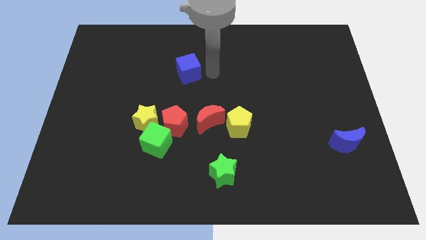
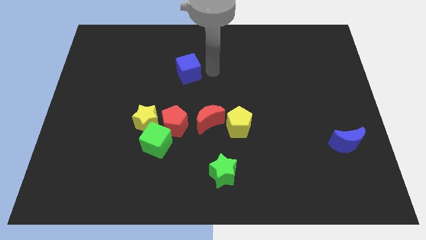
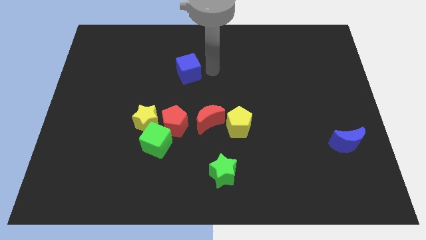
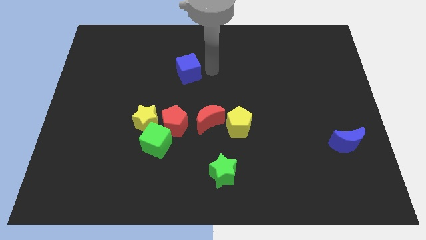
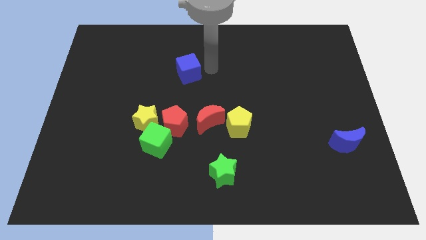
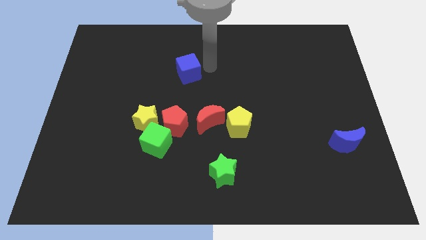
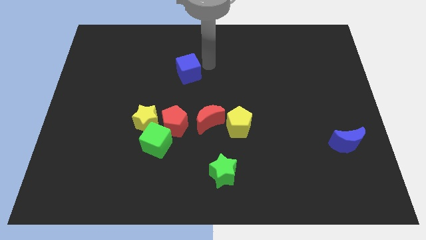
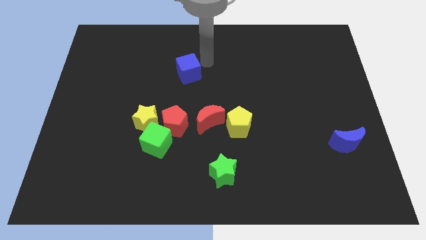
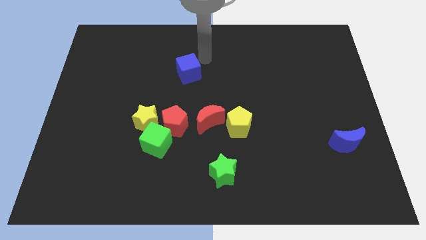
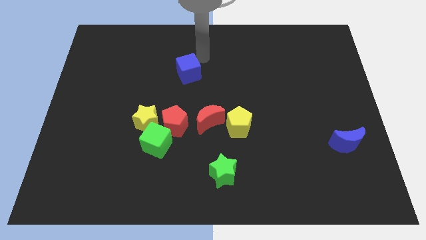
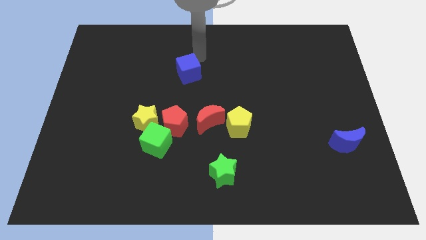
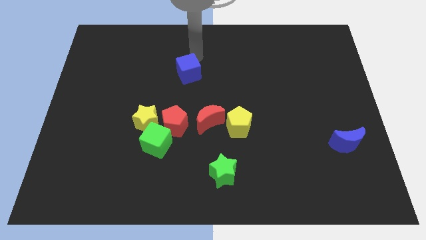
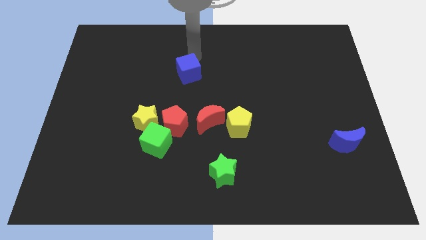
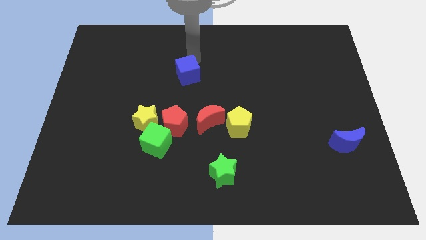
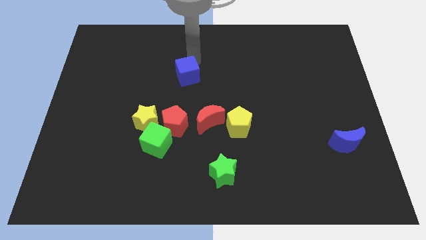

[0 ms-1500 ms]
touch the top of blue cube

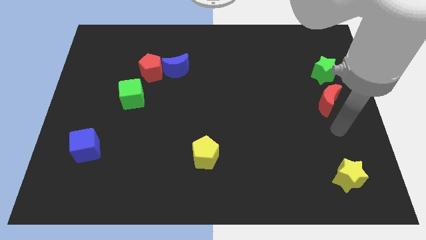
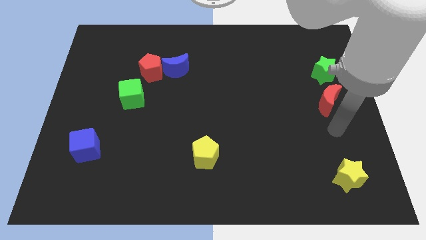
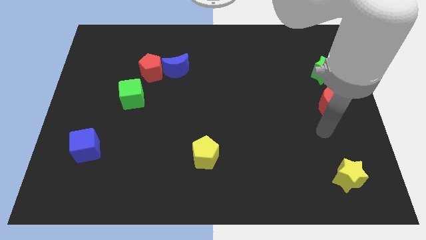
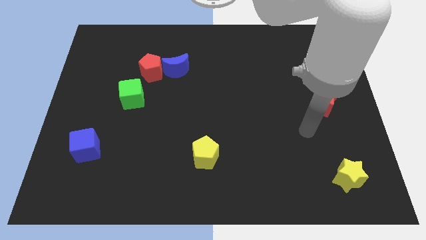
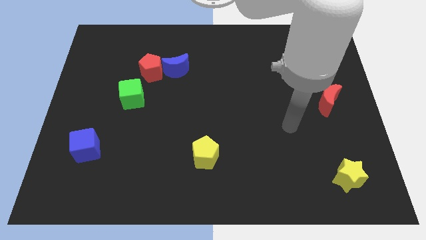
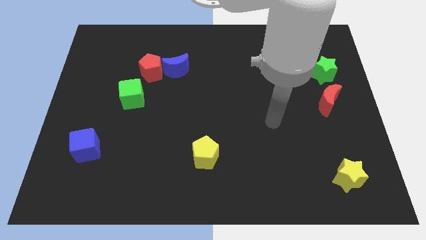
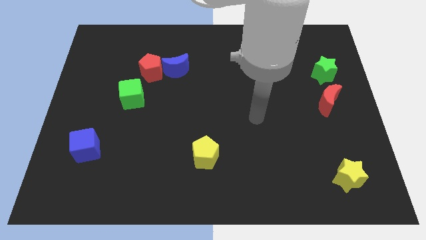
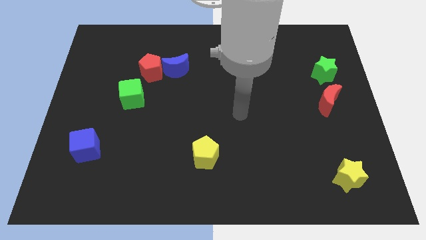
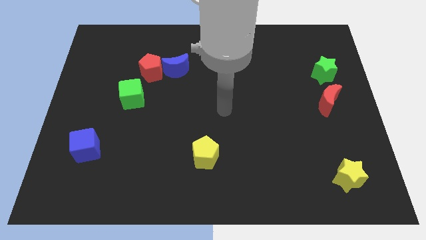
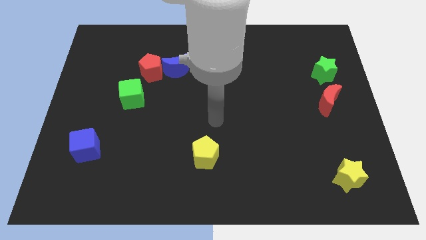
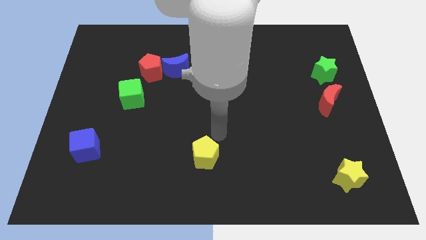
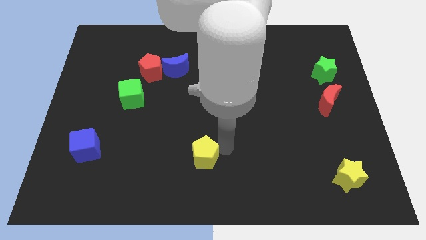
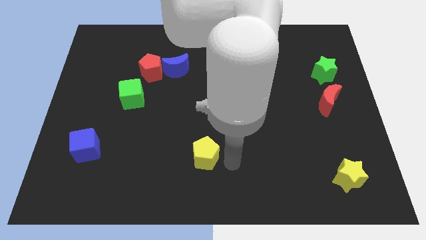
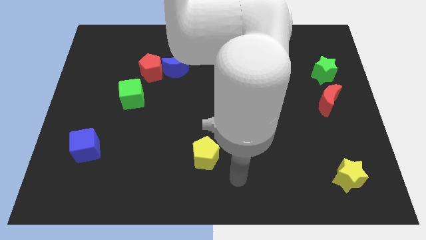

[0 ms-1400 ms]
touch the yellow pentagon

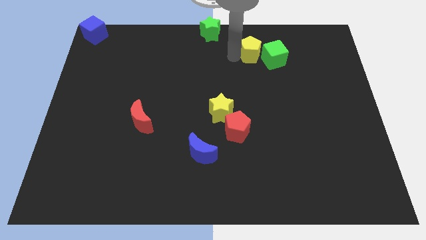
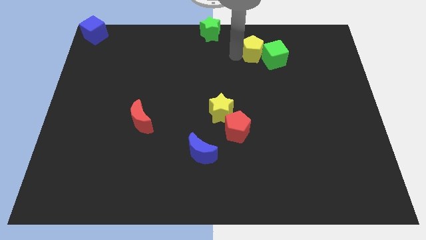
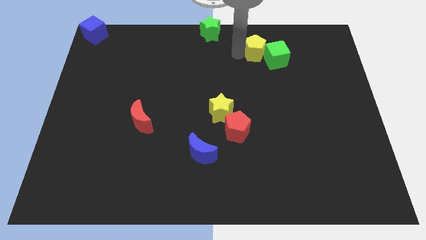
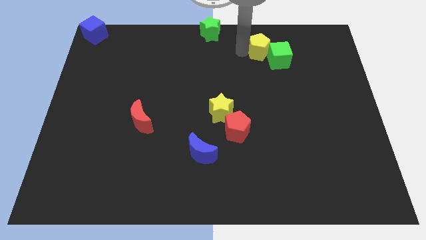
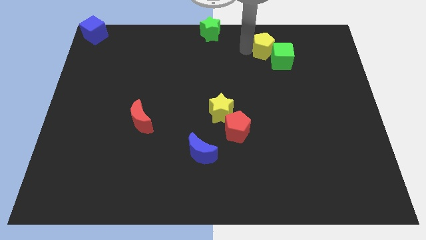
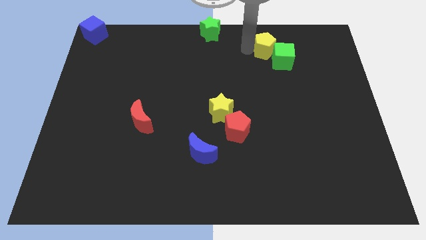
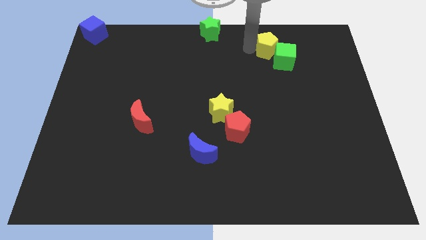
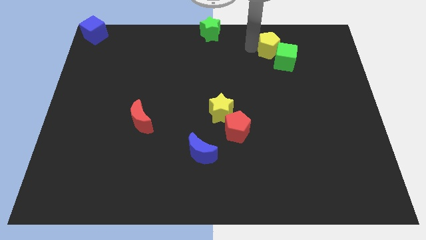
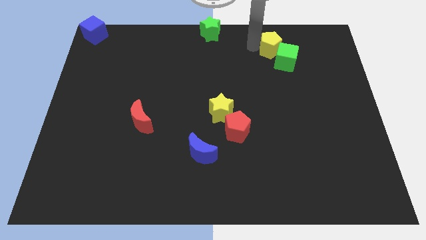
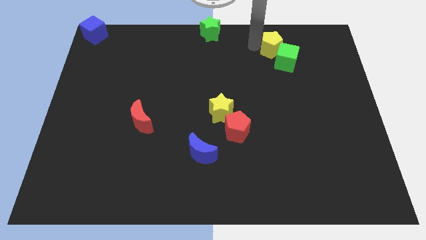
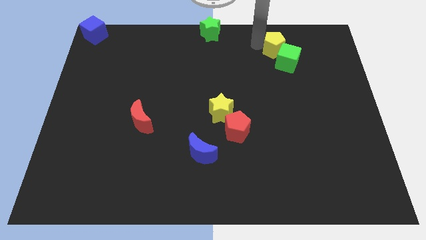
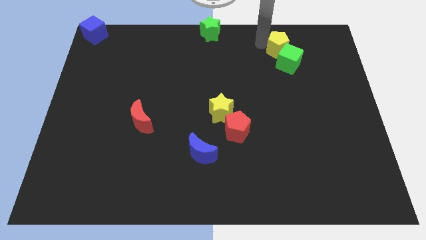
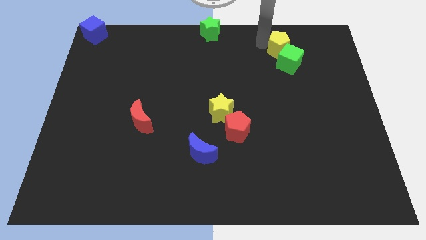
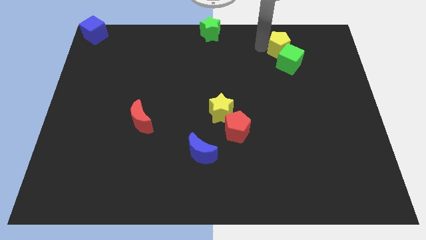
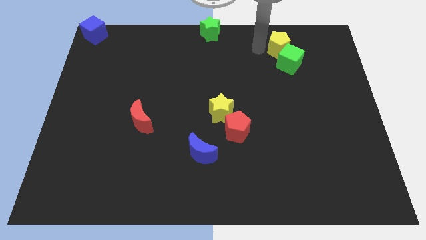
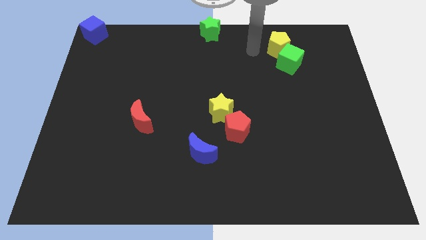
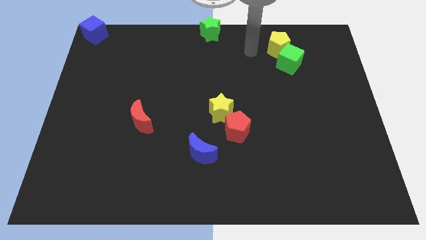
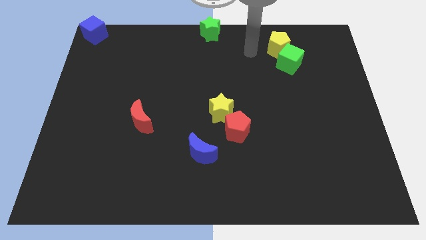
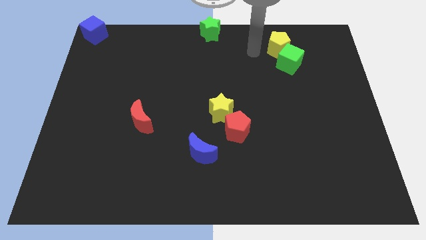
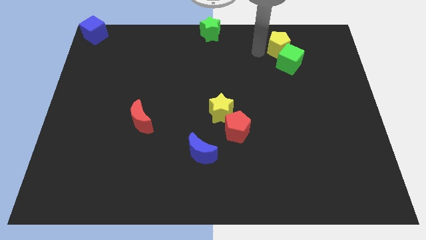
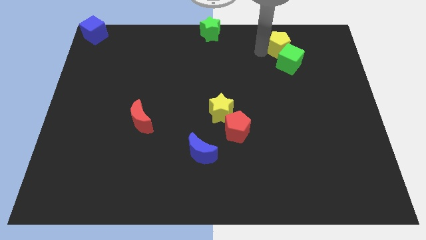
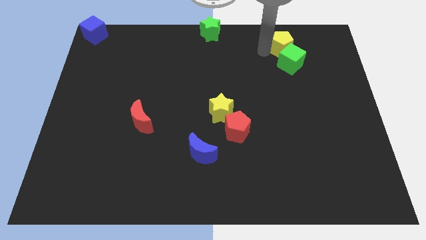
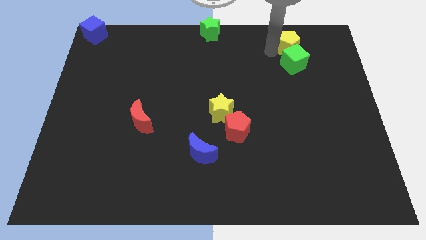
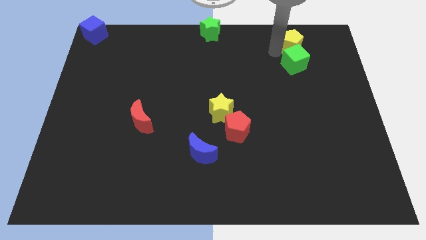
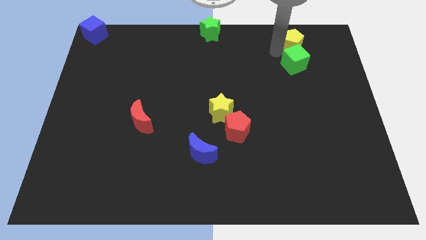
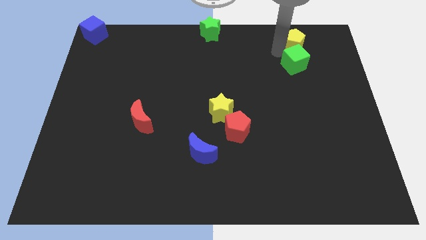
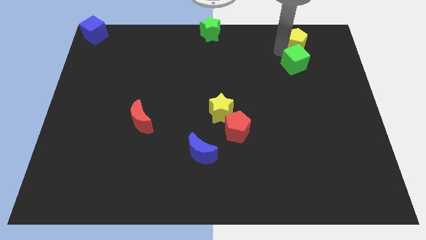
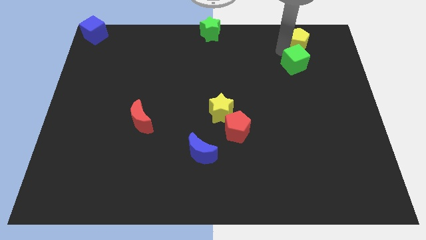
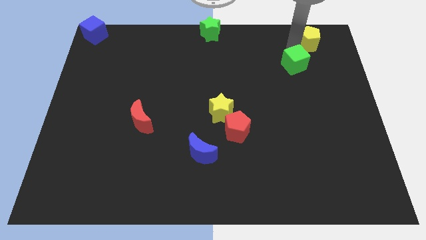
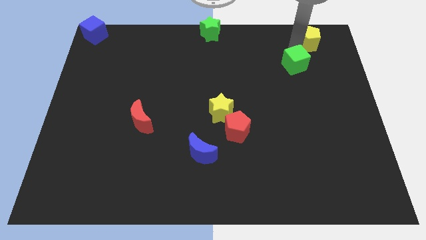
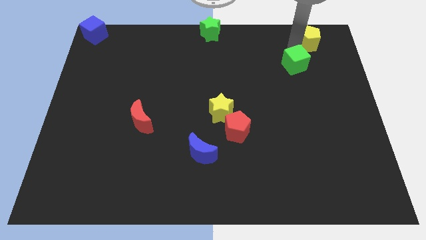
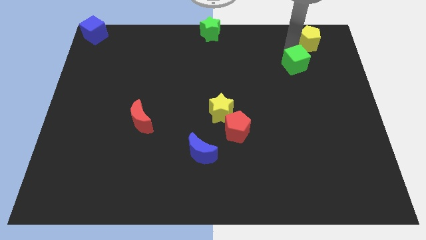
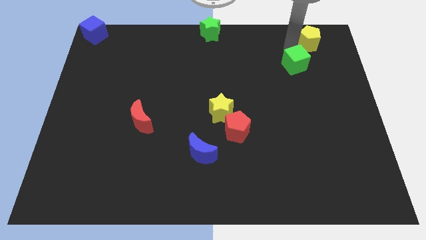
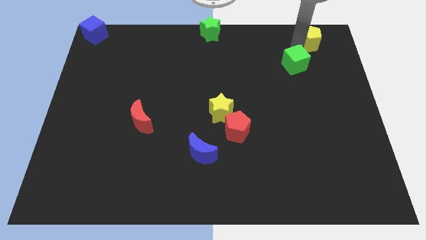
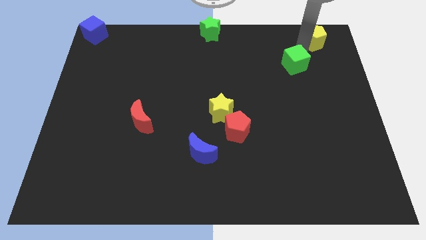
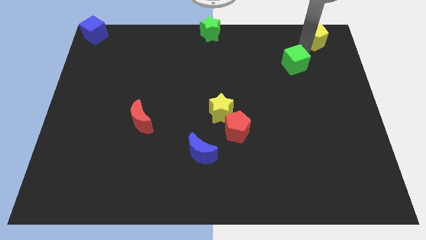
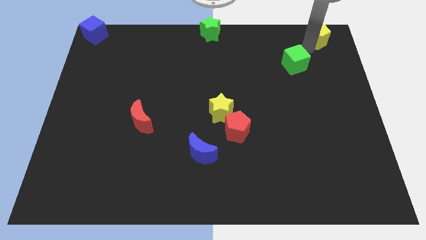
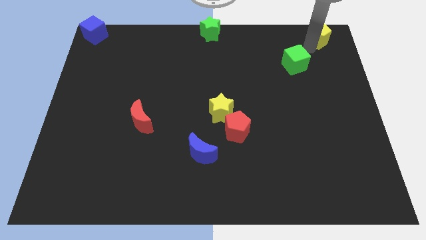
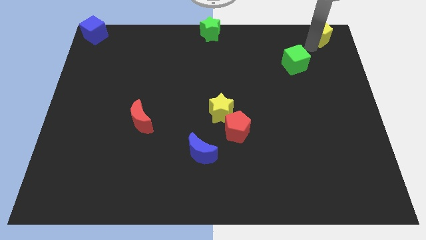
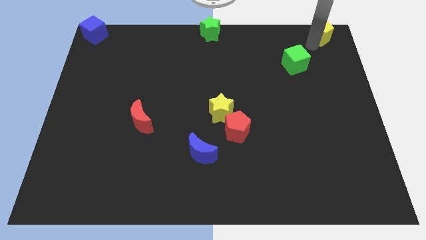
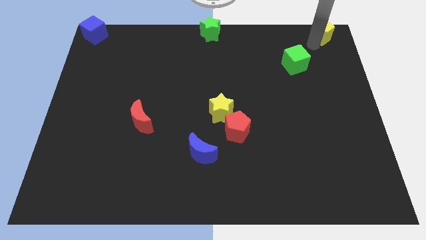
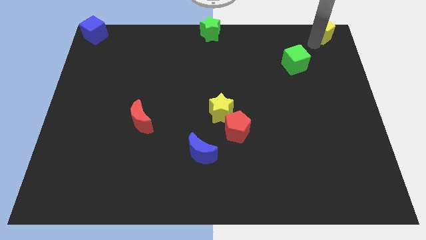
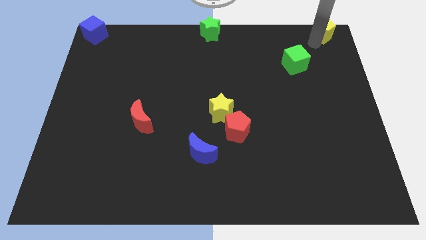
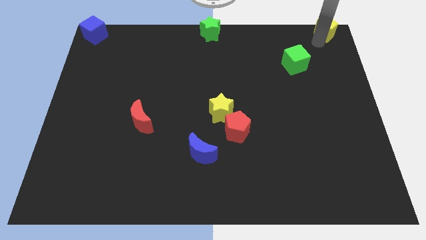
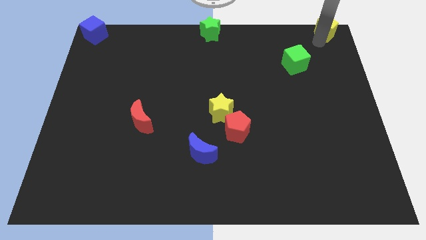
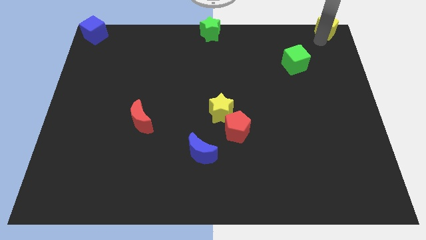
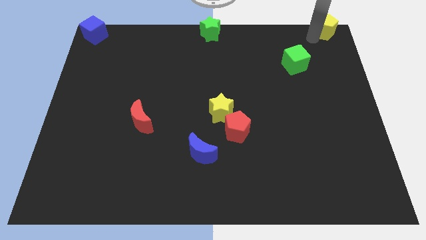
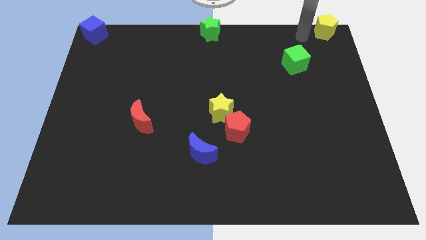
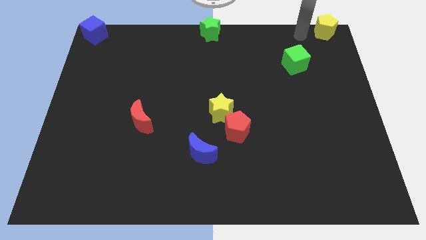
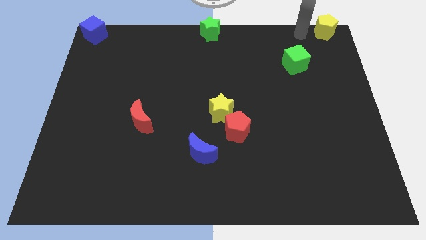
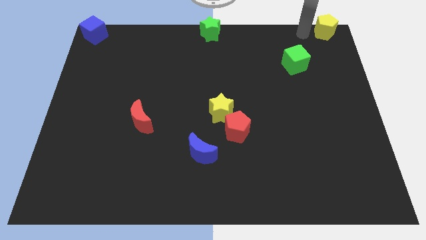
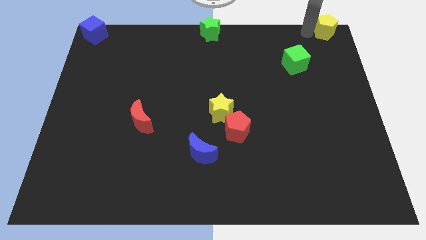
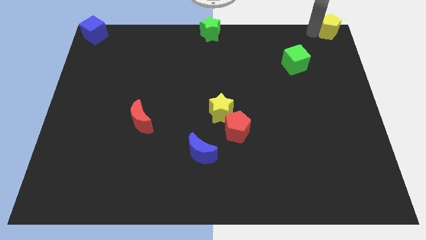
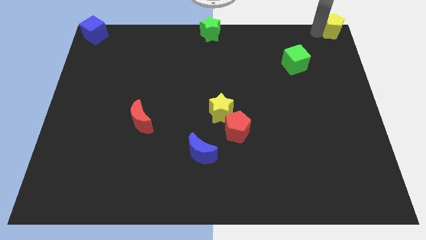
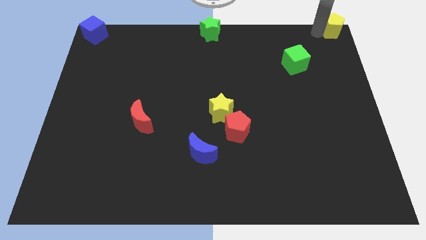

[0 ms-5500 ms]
push yellow pentagon towards top right corner of the board

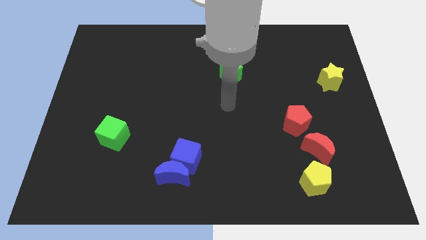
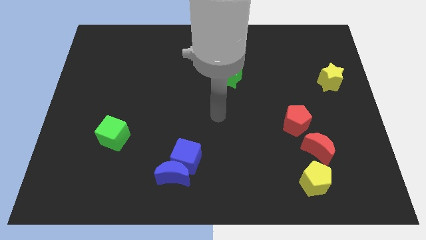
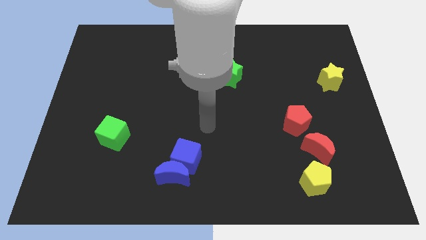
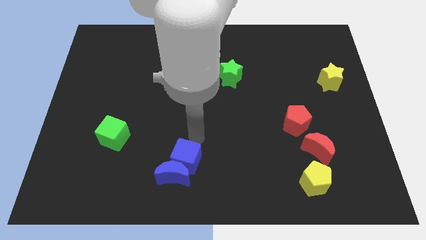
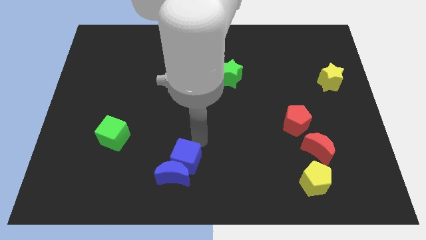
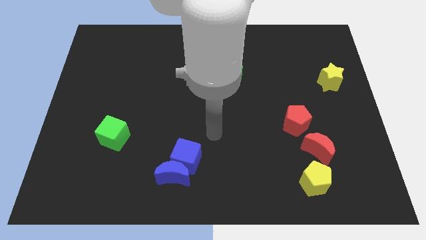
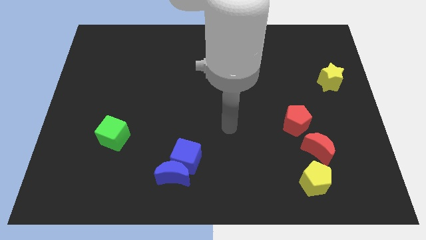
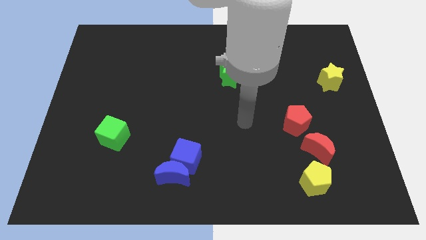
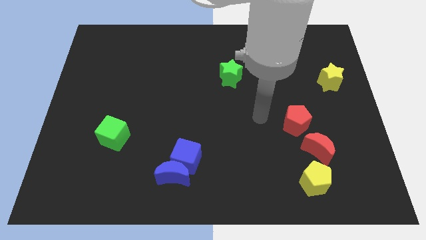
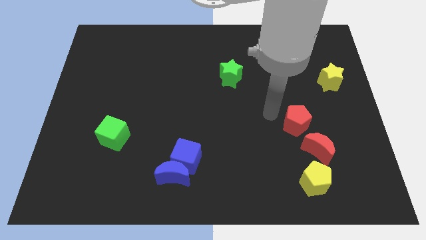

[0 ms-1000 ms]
move the arm towards the left of the red pentagon
